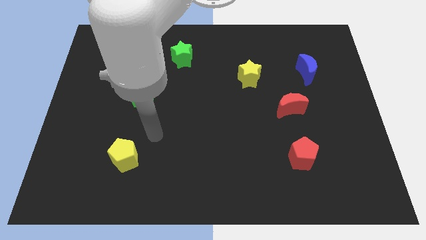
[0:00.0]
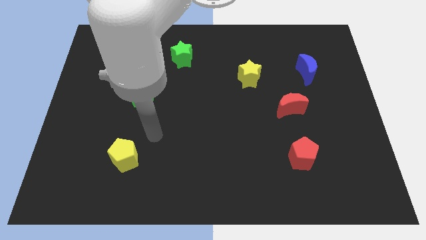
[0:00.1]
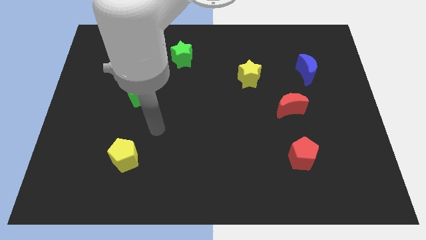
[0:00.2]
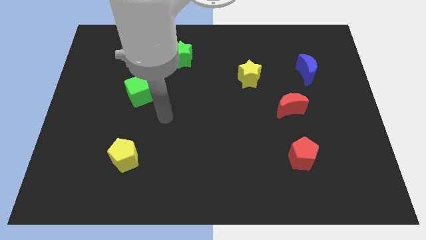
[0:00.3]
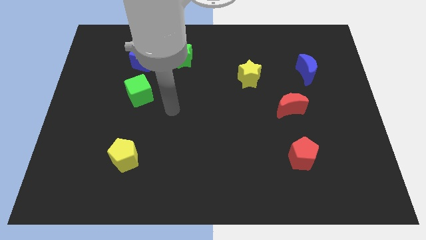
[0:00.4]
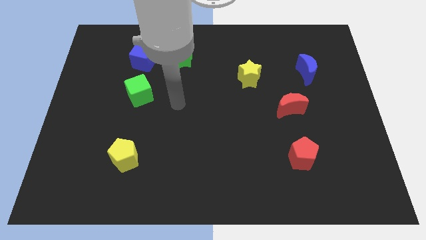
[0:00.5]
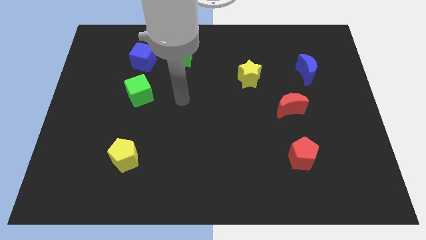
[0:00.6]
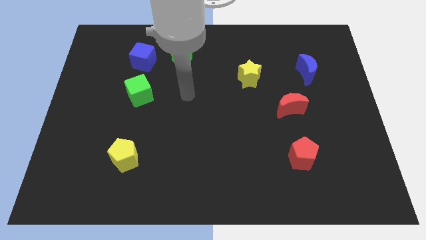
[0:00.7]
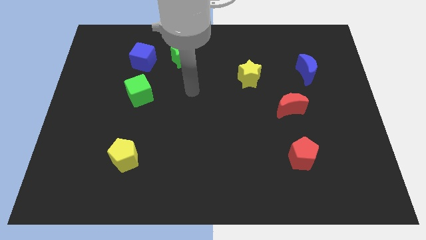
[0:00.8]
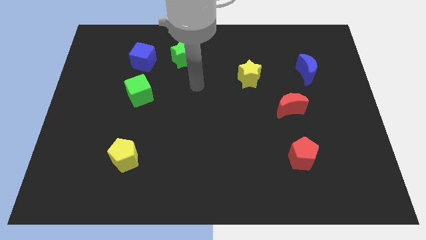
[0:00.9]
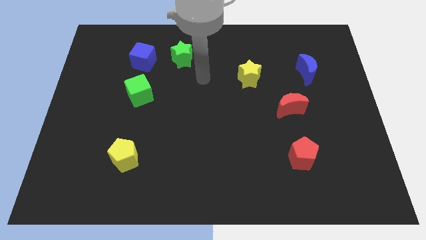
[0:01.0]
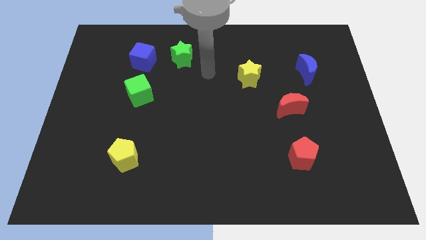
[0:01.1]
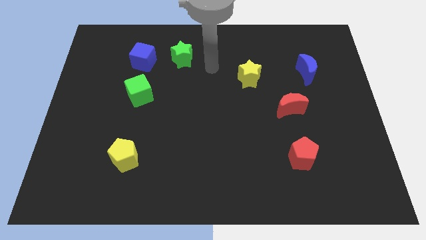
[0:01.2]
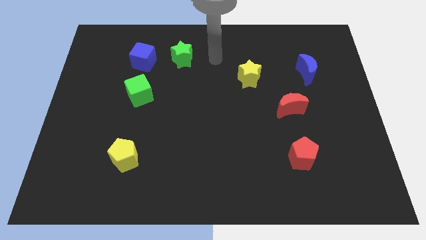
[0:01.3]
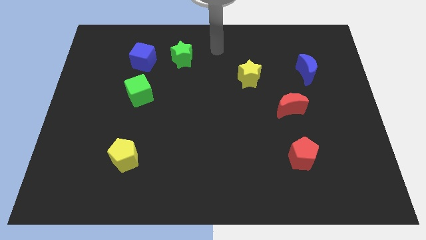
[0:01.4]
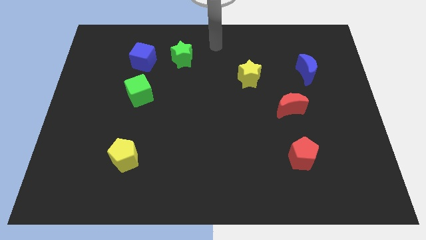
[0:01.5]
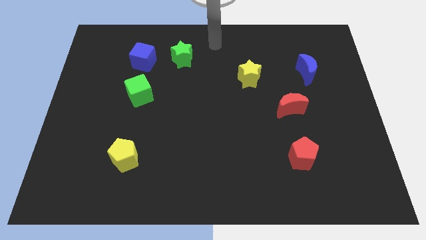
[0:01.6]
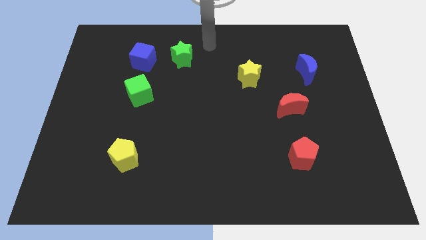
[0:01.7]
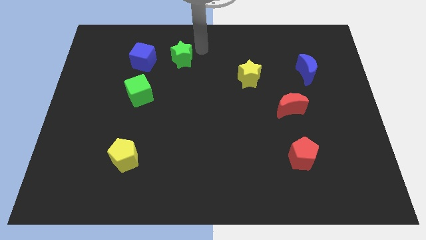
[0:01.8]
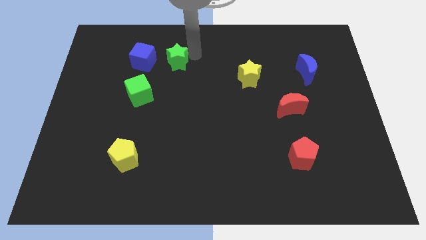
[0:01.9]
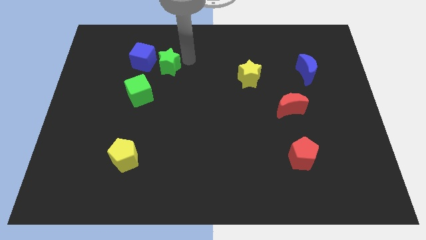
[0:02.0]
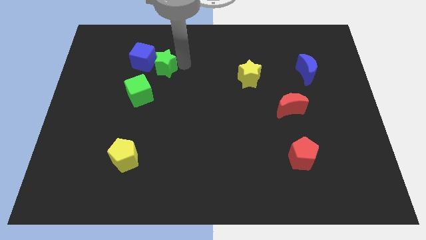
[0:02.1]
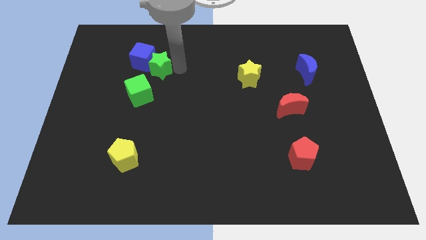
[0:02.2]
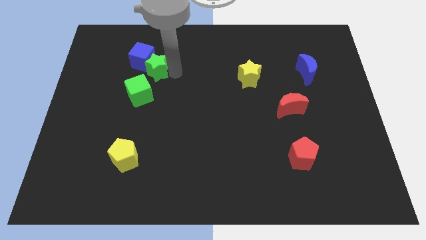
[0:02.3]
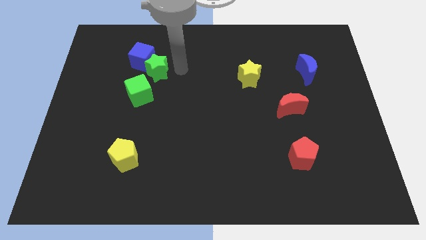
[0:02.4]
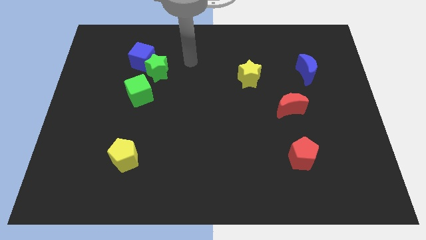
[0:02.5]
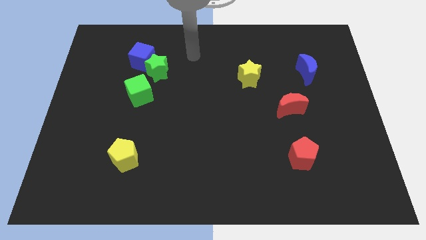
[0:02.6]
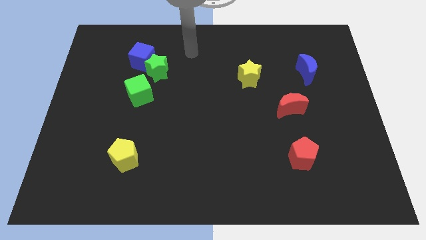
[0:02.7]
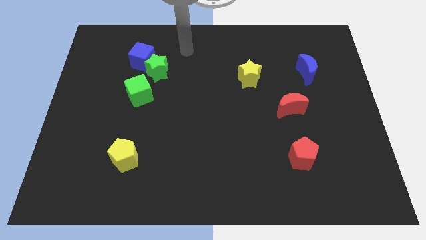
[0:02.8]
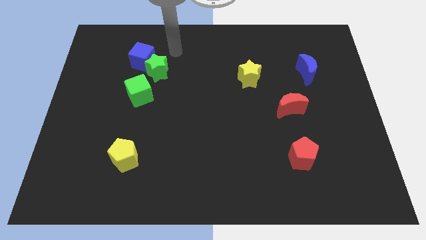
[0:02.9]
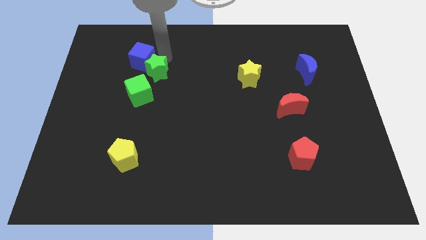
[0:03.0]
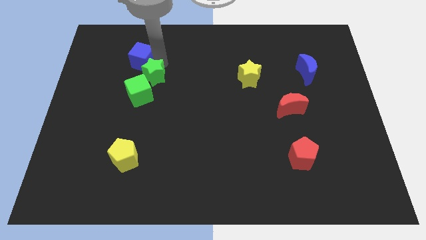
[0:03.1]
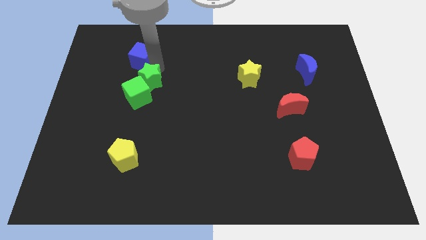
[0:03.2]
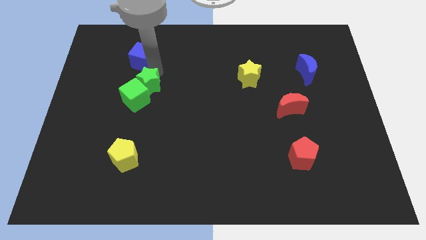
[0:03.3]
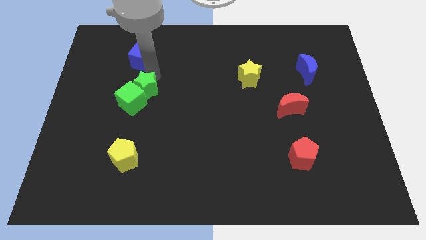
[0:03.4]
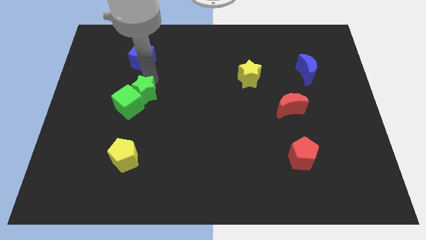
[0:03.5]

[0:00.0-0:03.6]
push the green star into the green cube

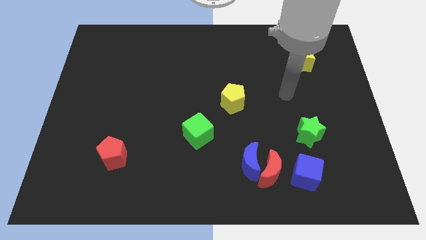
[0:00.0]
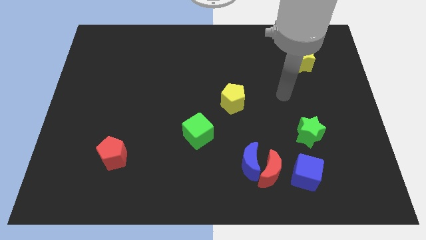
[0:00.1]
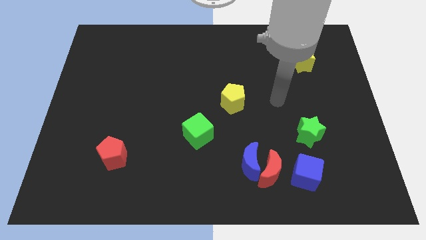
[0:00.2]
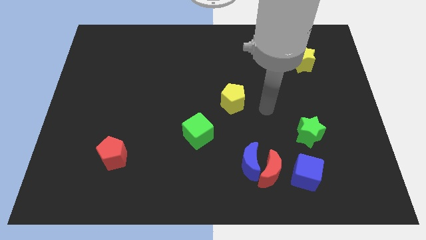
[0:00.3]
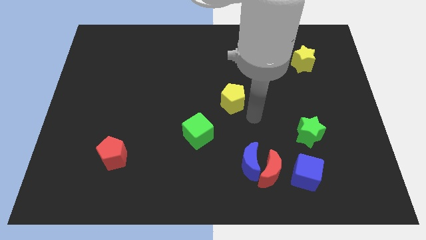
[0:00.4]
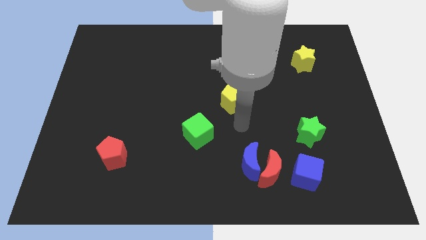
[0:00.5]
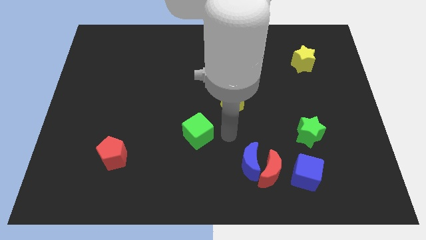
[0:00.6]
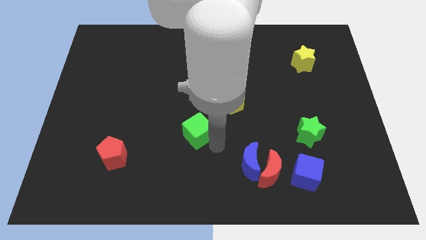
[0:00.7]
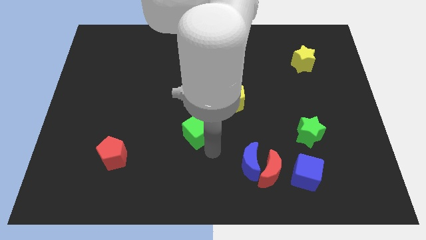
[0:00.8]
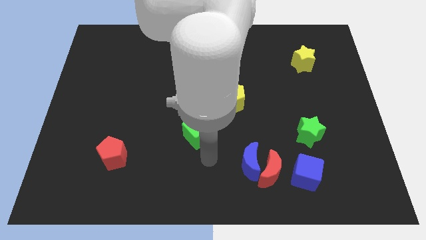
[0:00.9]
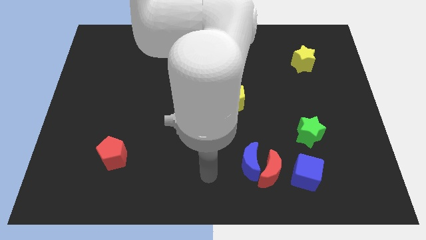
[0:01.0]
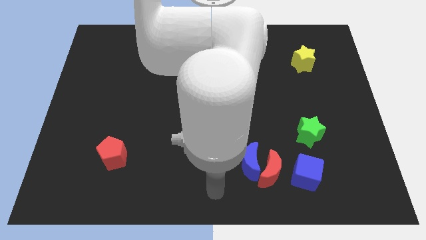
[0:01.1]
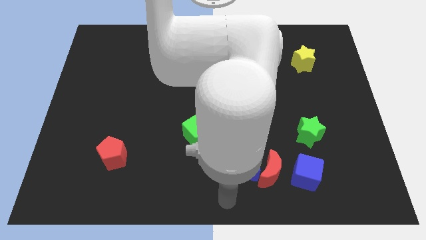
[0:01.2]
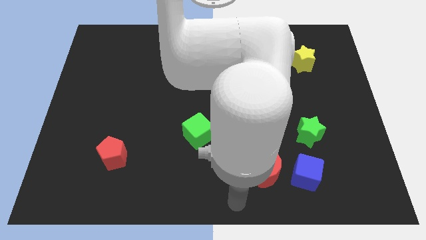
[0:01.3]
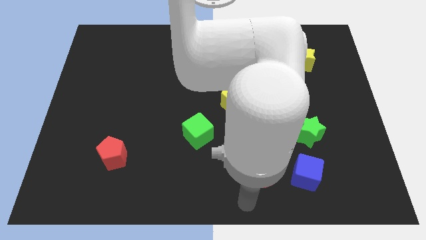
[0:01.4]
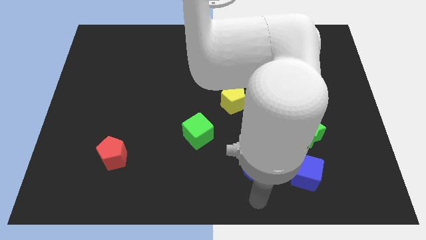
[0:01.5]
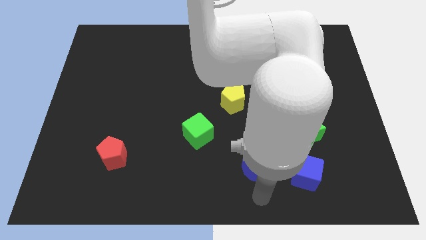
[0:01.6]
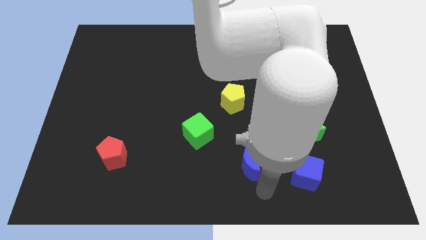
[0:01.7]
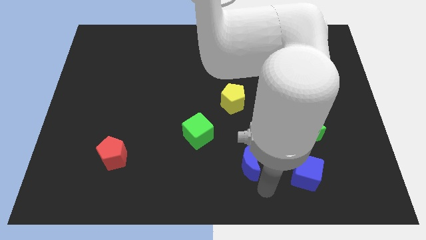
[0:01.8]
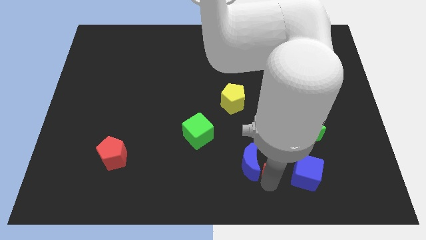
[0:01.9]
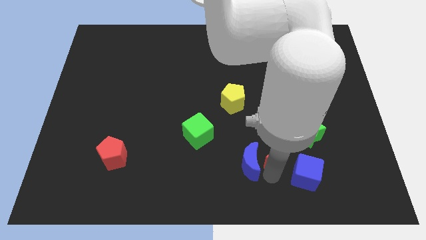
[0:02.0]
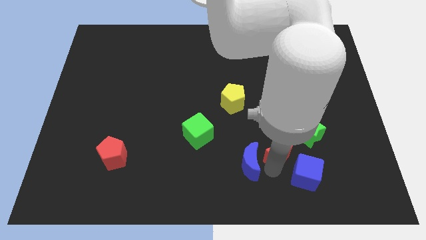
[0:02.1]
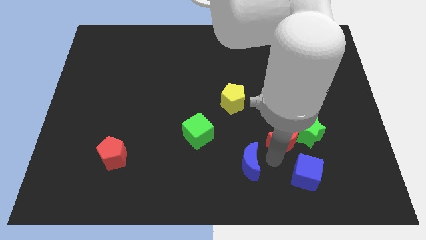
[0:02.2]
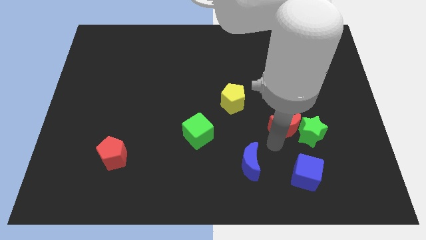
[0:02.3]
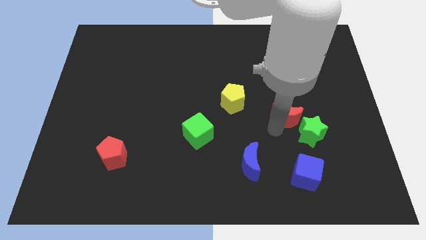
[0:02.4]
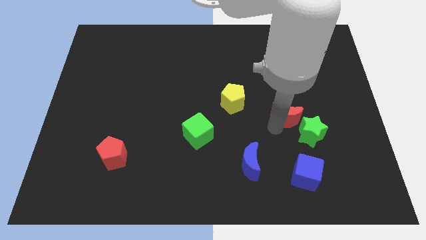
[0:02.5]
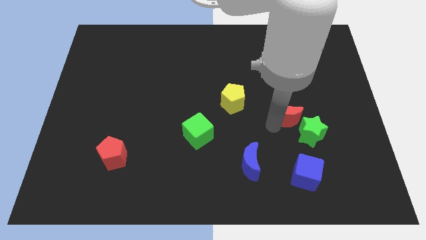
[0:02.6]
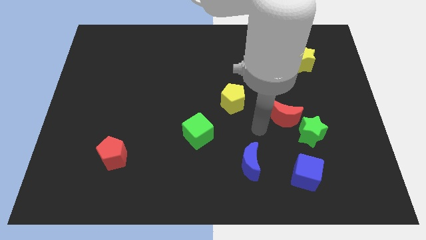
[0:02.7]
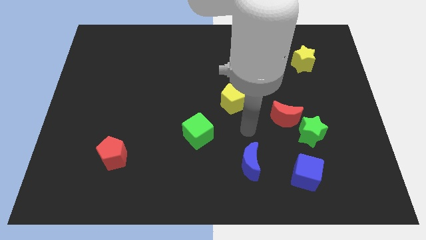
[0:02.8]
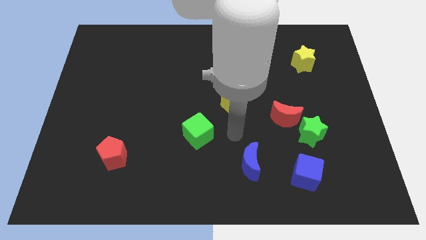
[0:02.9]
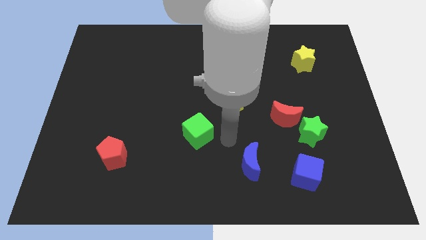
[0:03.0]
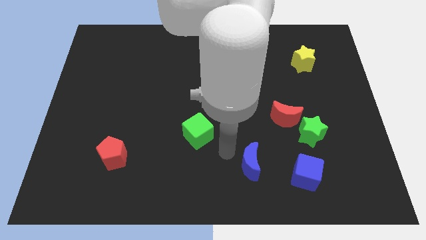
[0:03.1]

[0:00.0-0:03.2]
push red moon beside green star

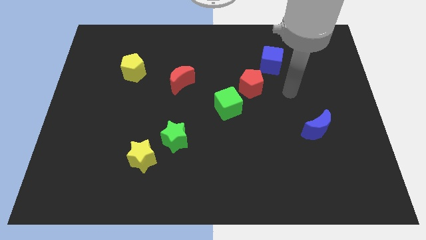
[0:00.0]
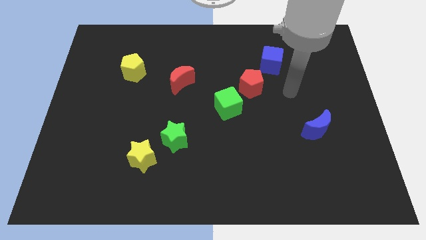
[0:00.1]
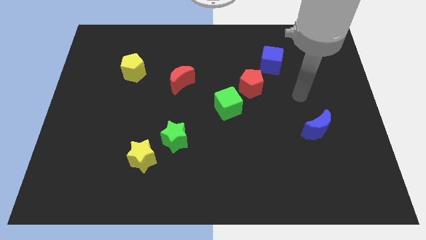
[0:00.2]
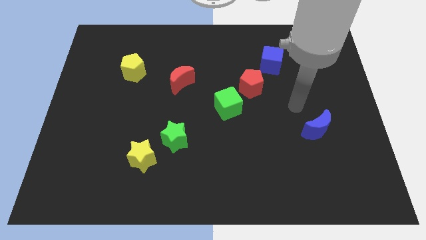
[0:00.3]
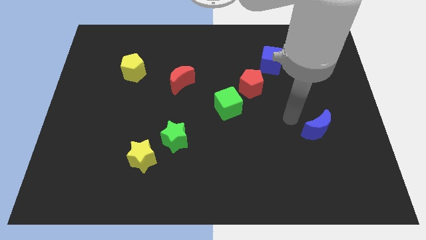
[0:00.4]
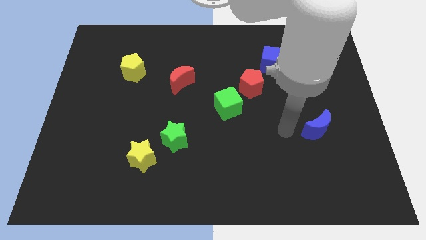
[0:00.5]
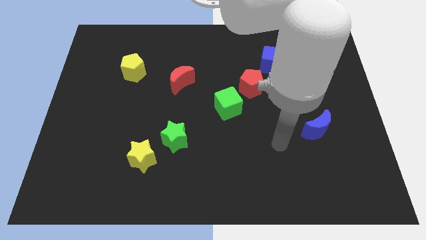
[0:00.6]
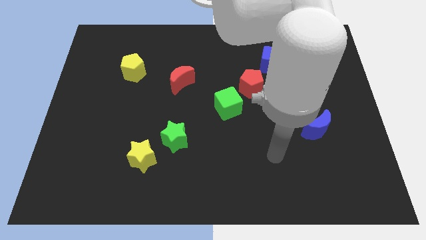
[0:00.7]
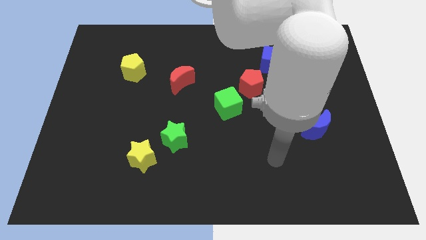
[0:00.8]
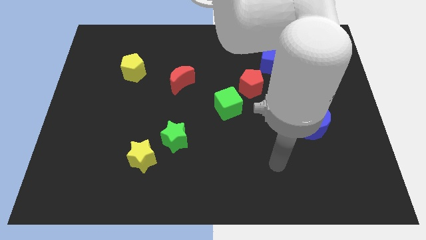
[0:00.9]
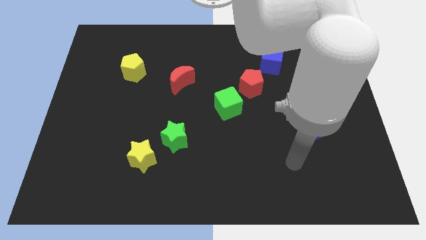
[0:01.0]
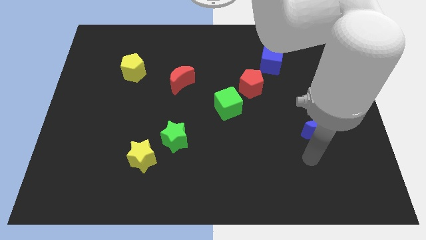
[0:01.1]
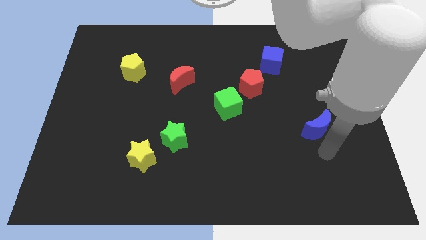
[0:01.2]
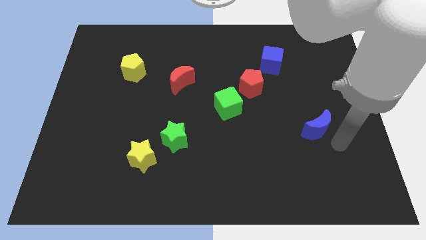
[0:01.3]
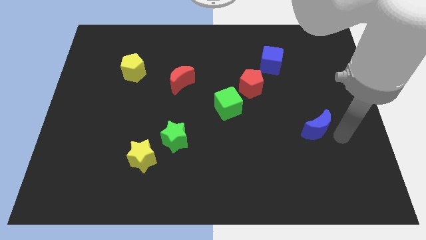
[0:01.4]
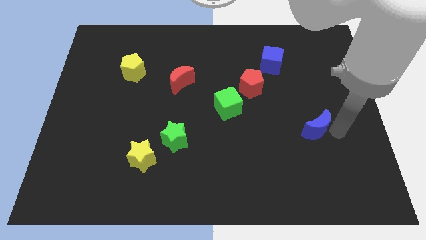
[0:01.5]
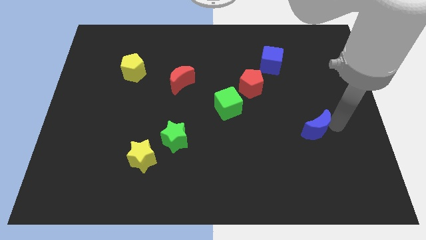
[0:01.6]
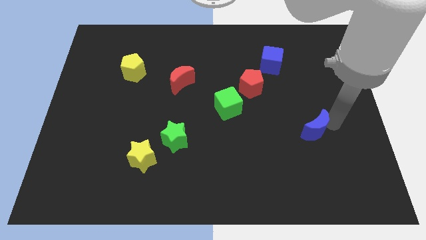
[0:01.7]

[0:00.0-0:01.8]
place the arm right to the blue moon

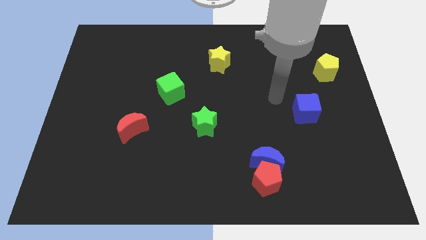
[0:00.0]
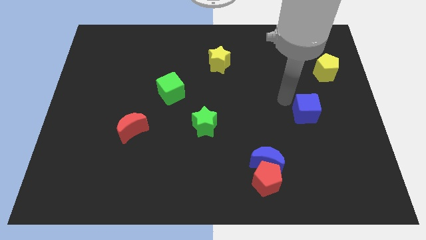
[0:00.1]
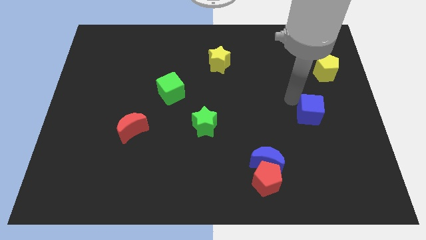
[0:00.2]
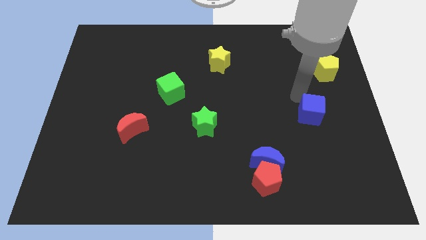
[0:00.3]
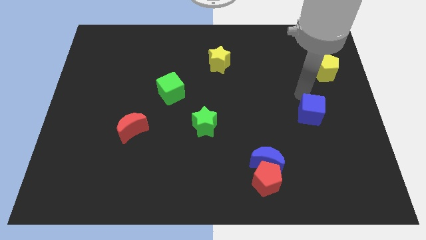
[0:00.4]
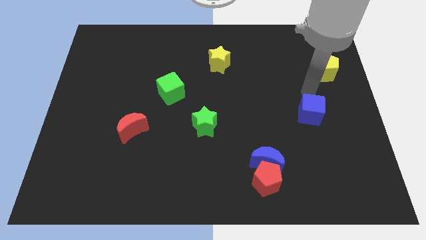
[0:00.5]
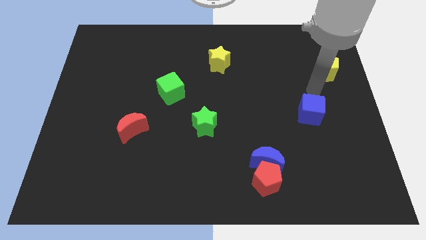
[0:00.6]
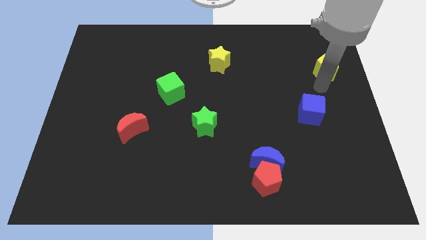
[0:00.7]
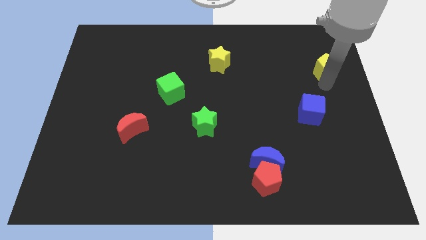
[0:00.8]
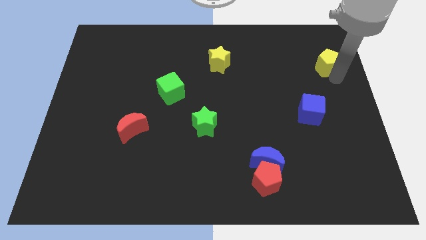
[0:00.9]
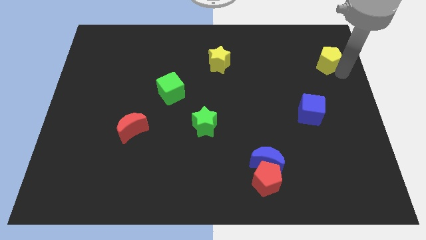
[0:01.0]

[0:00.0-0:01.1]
slightly move the blue cube towards the right center of the board
